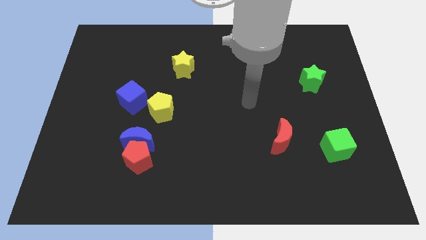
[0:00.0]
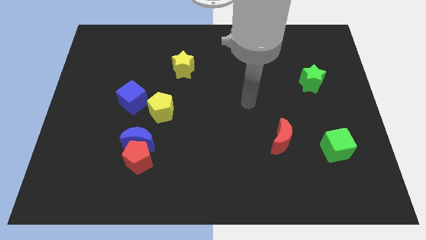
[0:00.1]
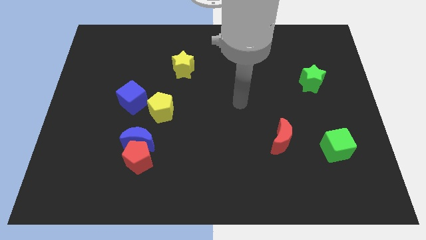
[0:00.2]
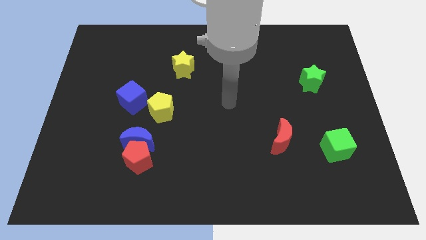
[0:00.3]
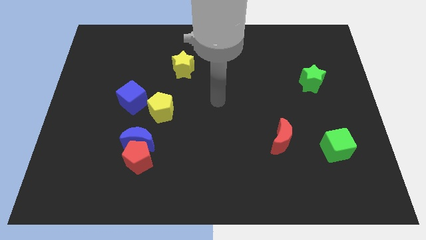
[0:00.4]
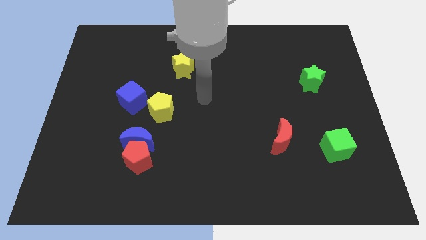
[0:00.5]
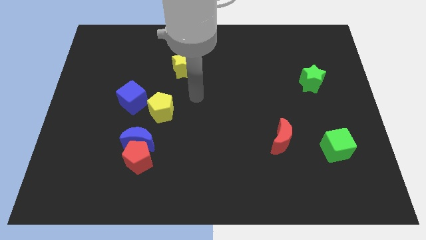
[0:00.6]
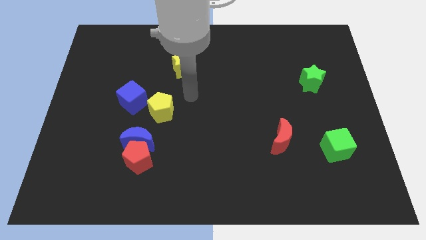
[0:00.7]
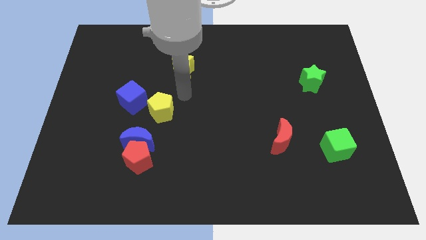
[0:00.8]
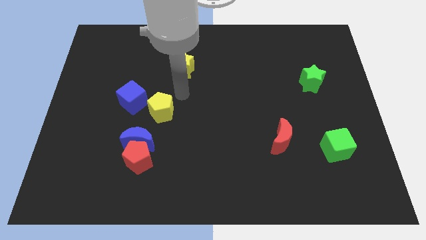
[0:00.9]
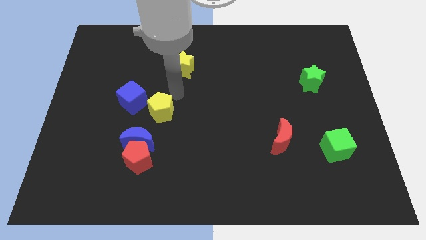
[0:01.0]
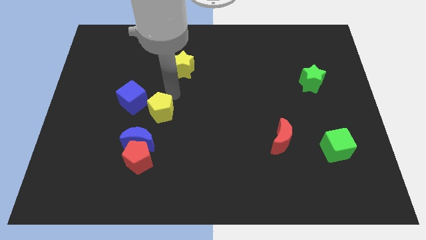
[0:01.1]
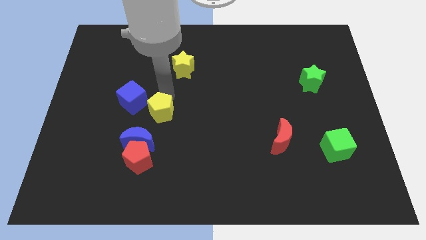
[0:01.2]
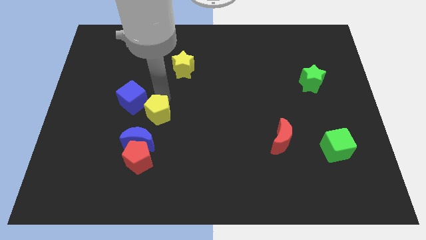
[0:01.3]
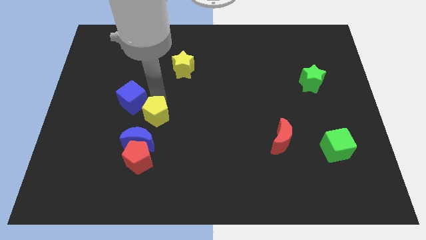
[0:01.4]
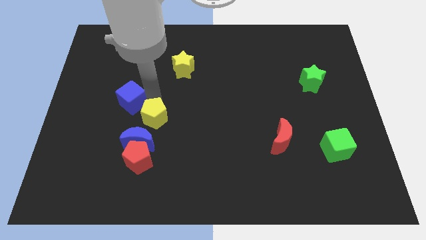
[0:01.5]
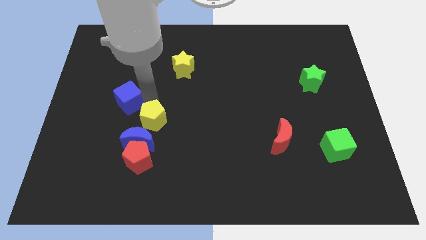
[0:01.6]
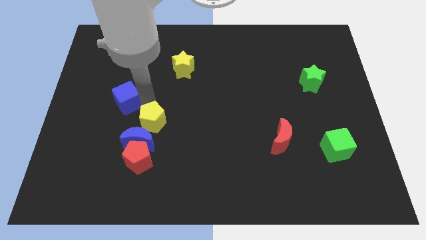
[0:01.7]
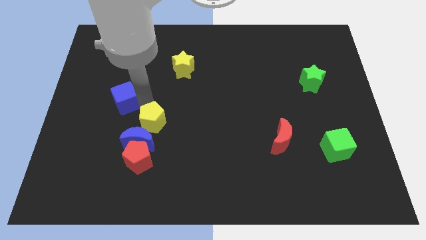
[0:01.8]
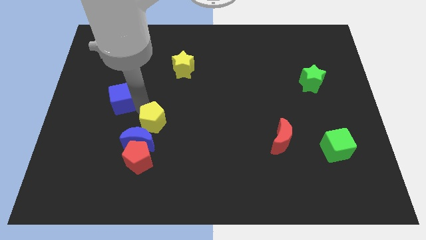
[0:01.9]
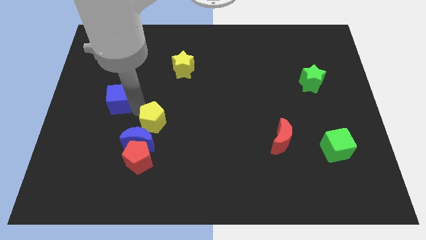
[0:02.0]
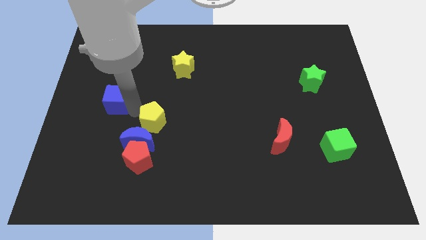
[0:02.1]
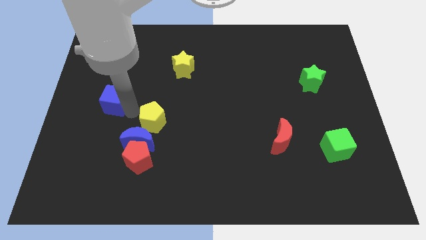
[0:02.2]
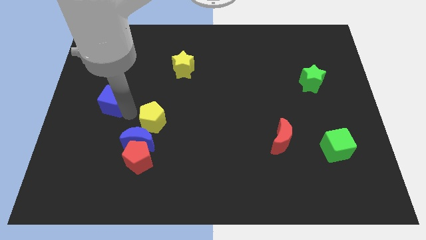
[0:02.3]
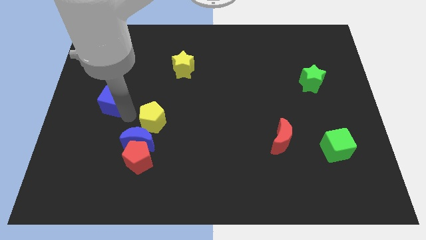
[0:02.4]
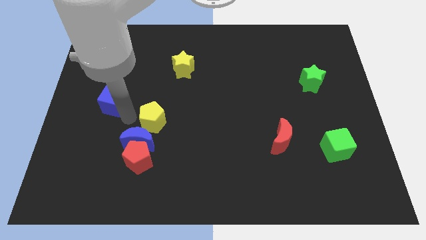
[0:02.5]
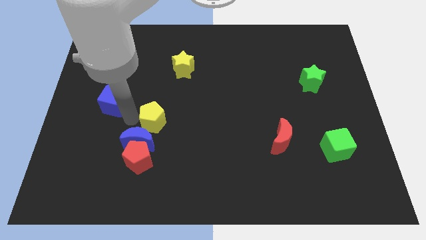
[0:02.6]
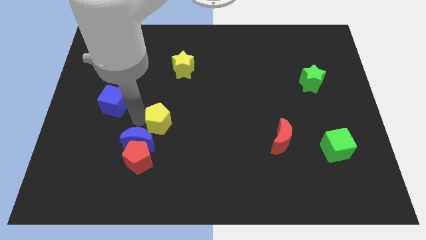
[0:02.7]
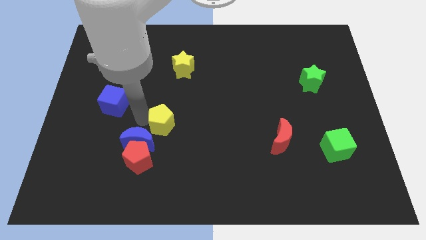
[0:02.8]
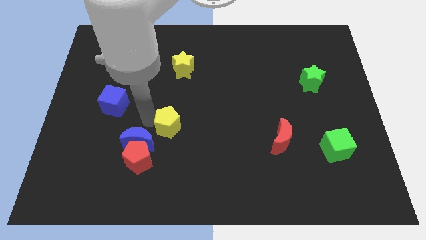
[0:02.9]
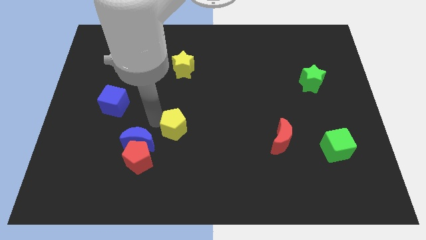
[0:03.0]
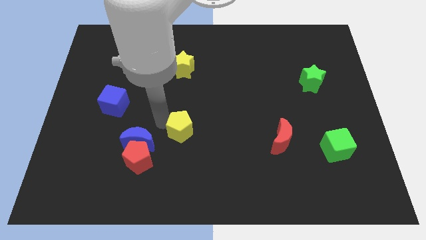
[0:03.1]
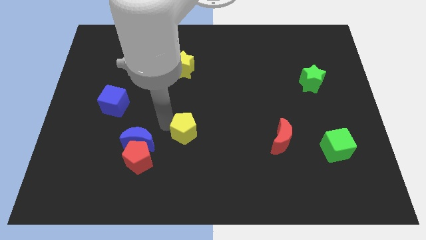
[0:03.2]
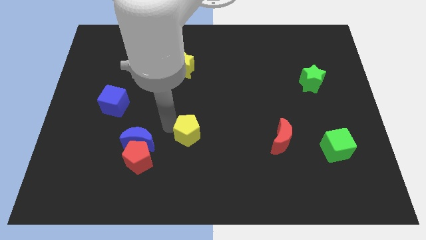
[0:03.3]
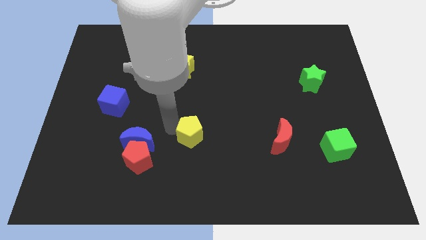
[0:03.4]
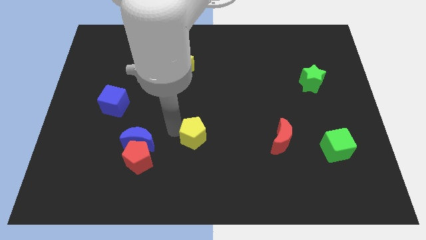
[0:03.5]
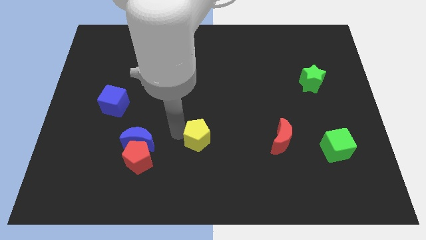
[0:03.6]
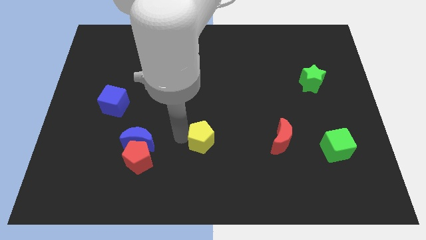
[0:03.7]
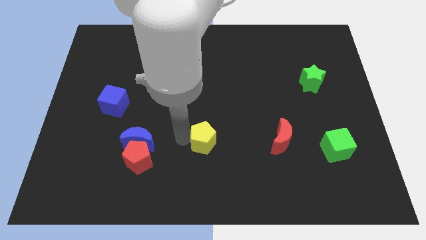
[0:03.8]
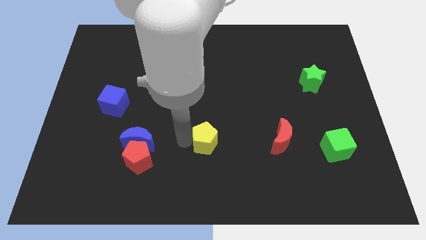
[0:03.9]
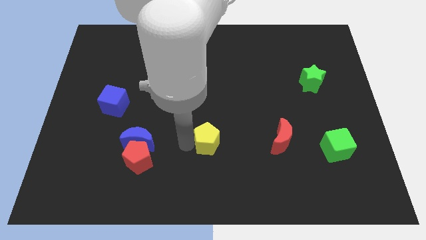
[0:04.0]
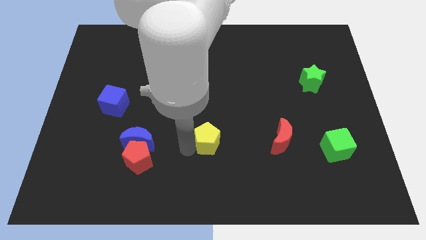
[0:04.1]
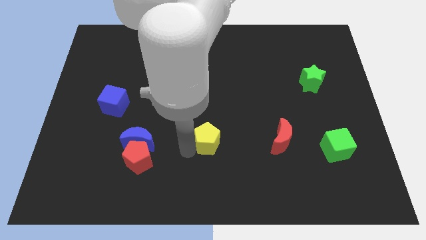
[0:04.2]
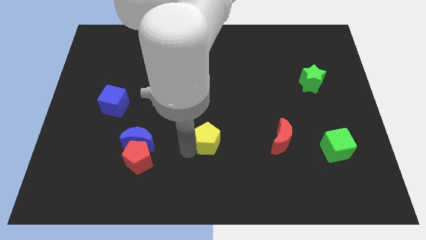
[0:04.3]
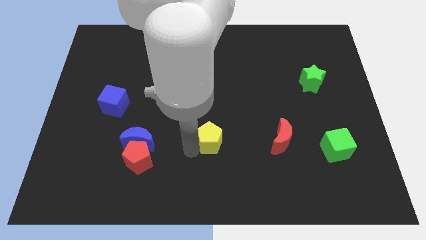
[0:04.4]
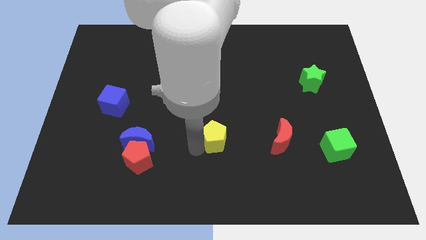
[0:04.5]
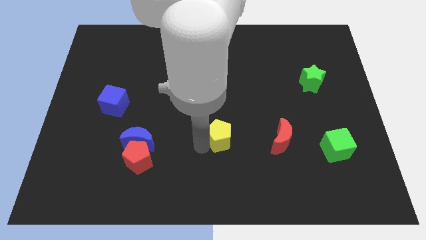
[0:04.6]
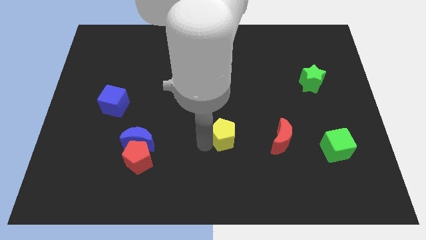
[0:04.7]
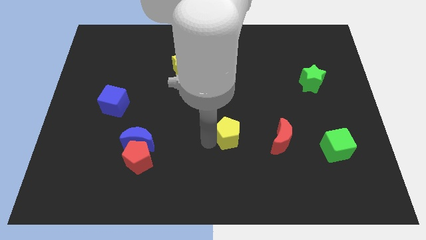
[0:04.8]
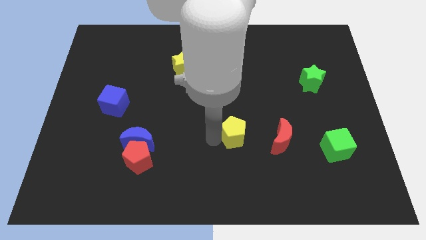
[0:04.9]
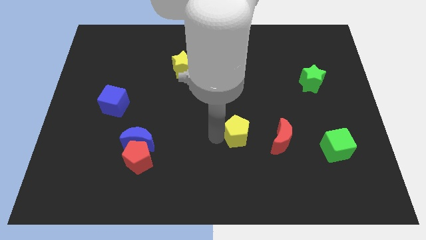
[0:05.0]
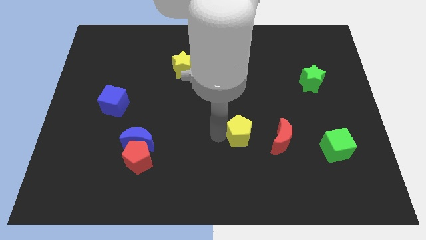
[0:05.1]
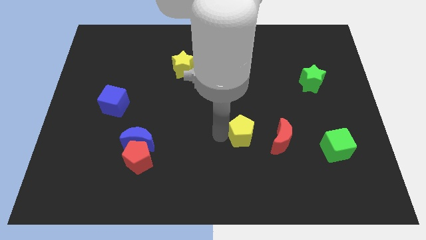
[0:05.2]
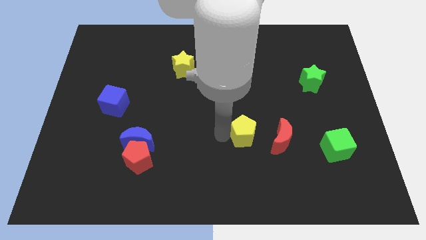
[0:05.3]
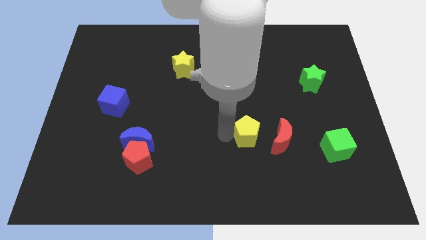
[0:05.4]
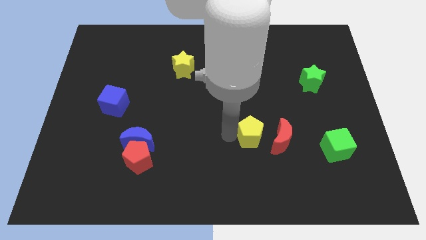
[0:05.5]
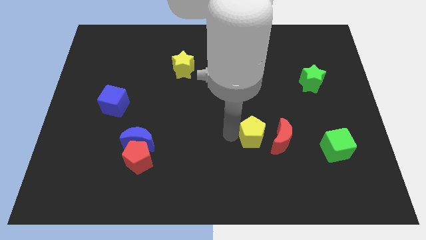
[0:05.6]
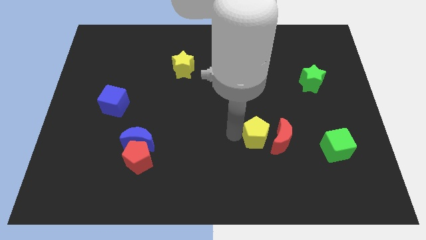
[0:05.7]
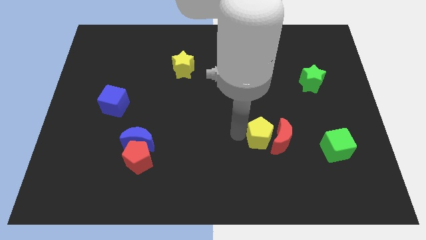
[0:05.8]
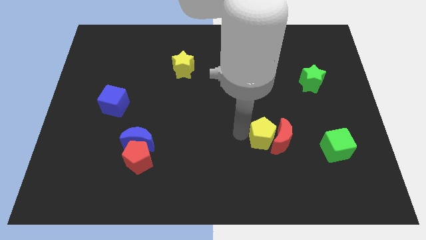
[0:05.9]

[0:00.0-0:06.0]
move the yellow pentagon next to the red moon

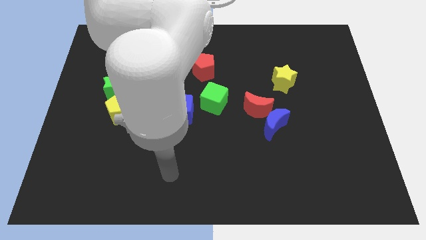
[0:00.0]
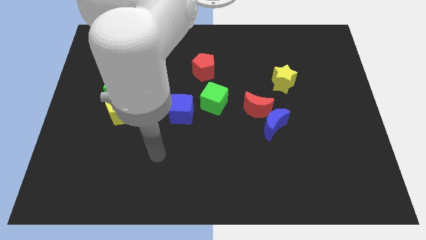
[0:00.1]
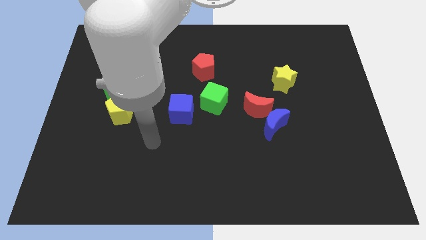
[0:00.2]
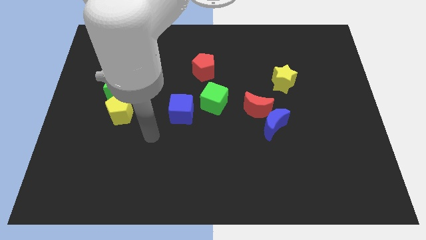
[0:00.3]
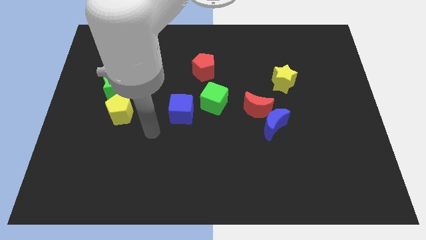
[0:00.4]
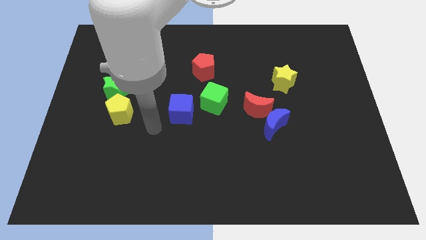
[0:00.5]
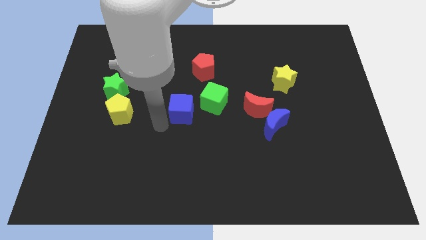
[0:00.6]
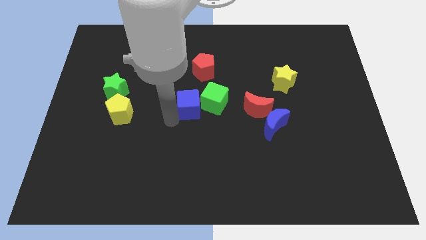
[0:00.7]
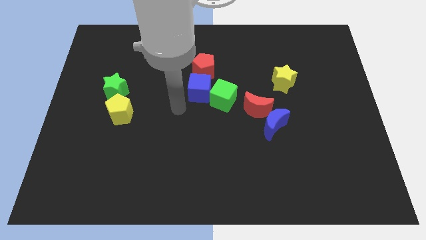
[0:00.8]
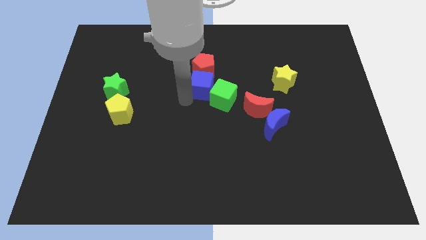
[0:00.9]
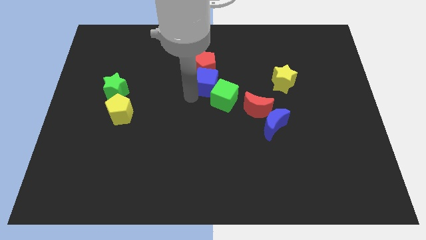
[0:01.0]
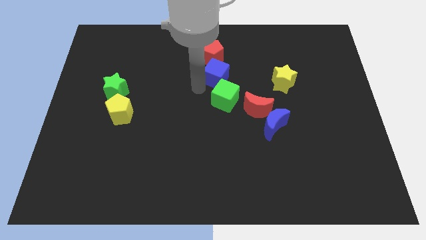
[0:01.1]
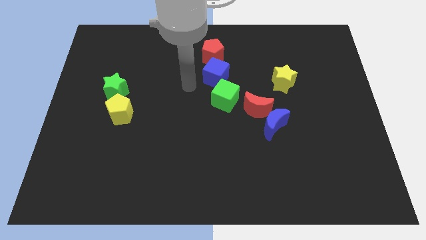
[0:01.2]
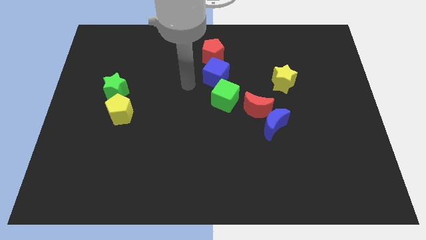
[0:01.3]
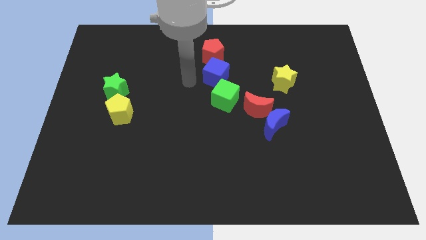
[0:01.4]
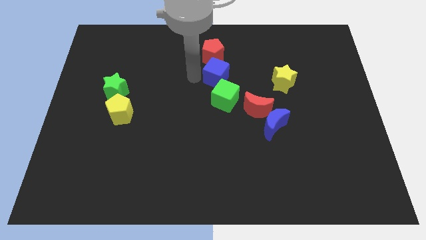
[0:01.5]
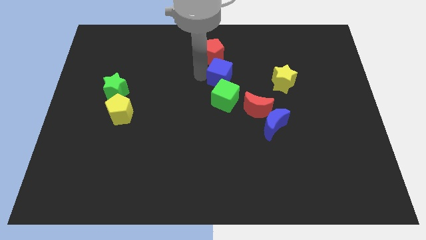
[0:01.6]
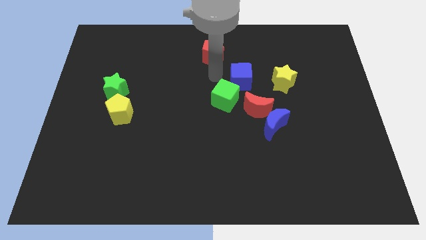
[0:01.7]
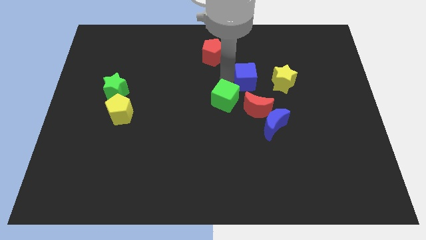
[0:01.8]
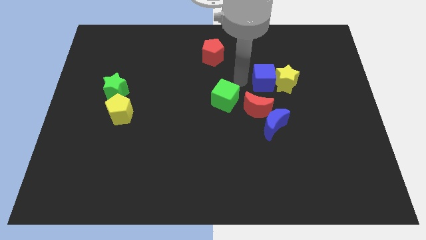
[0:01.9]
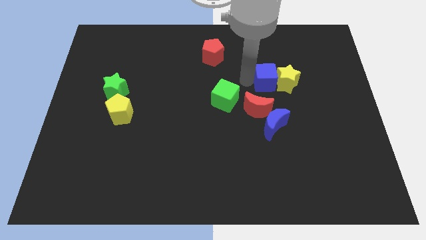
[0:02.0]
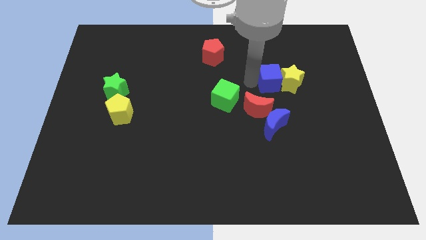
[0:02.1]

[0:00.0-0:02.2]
move the blue cube to the yellow star
